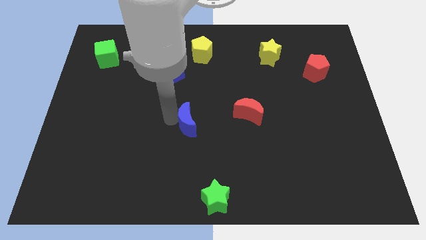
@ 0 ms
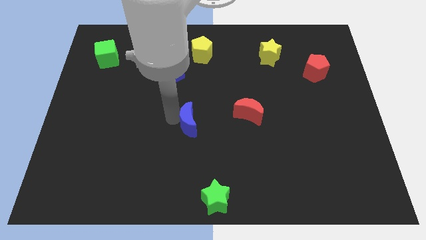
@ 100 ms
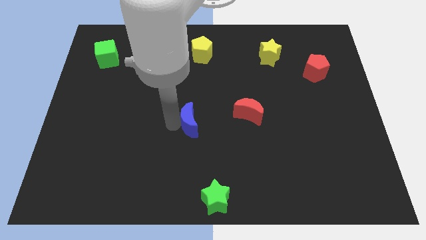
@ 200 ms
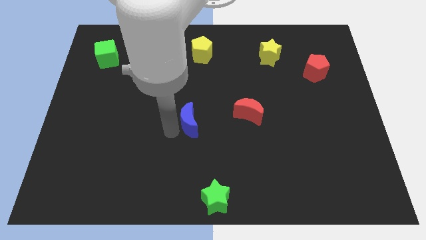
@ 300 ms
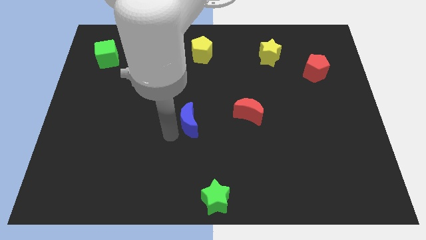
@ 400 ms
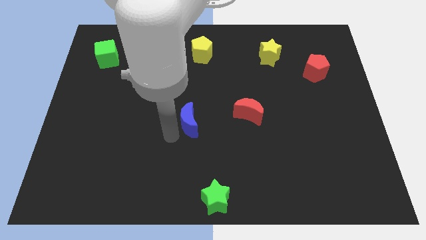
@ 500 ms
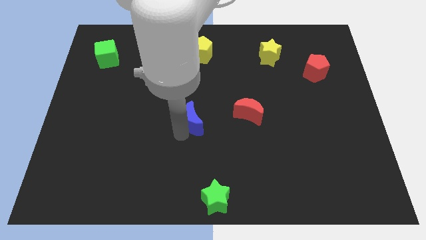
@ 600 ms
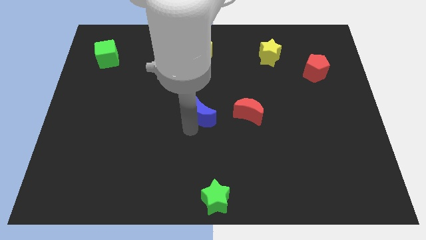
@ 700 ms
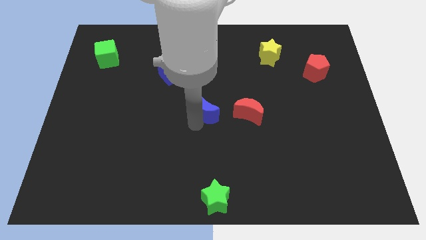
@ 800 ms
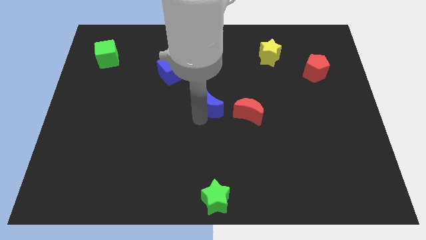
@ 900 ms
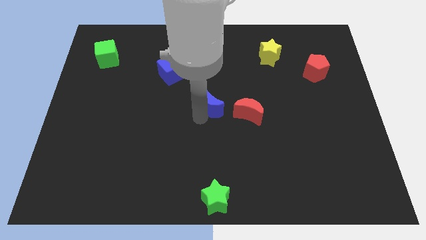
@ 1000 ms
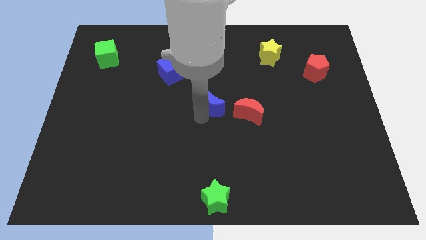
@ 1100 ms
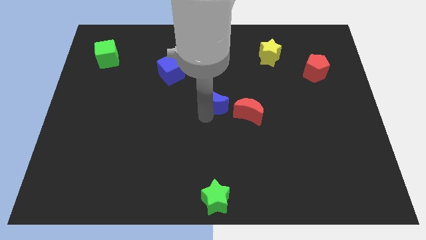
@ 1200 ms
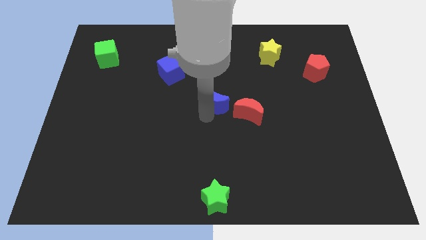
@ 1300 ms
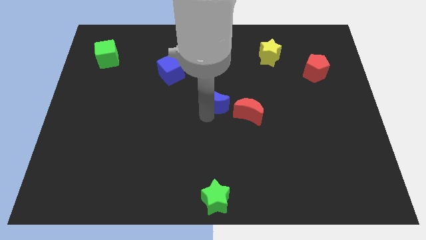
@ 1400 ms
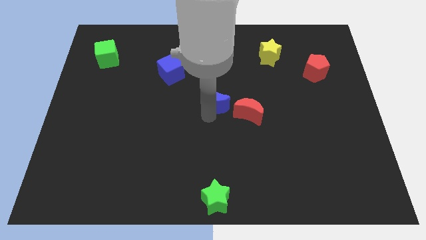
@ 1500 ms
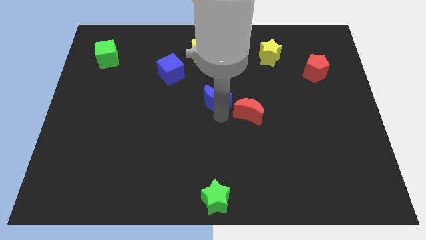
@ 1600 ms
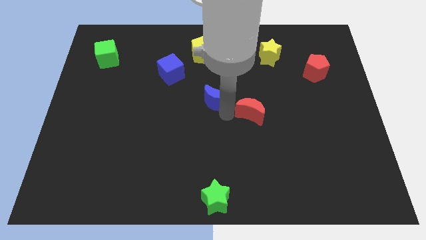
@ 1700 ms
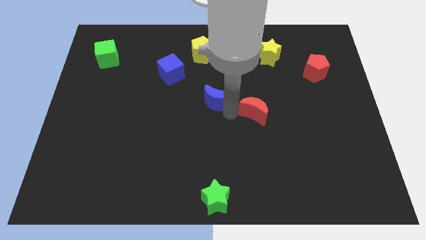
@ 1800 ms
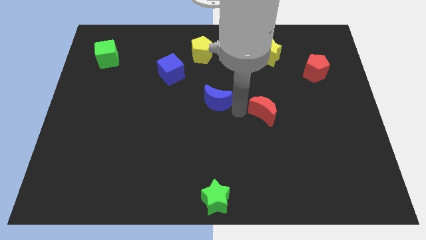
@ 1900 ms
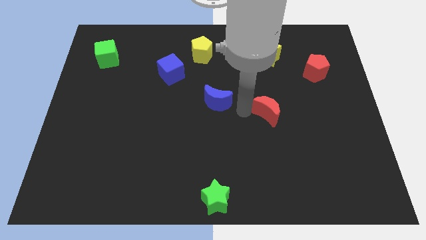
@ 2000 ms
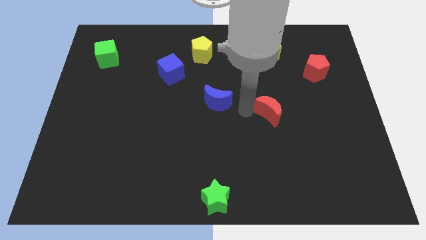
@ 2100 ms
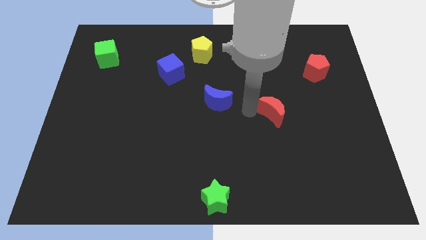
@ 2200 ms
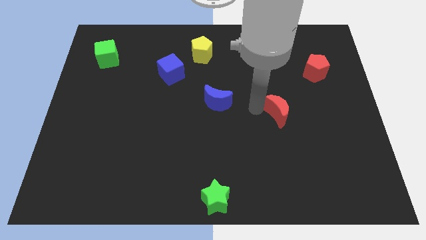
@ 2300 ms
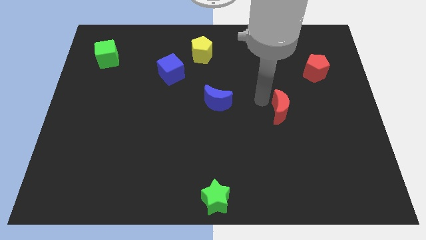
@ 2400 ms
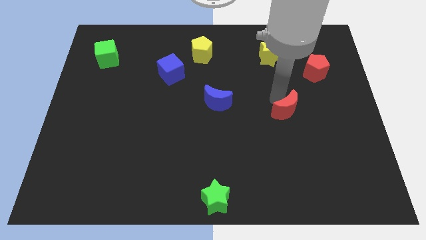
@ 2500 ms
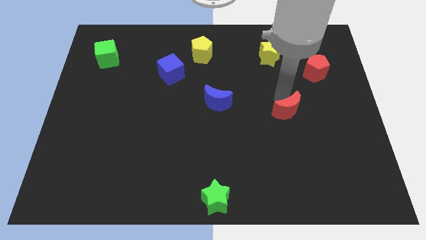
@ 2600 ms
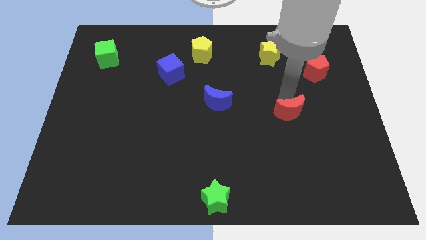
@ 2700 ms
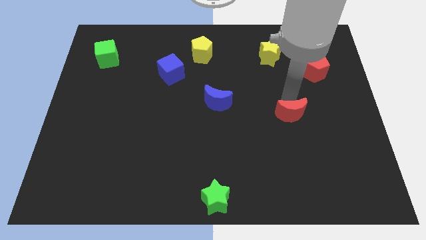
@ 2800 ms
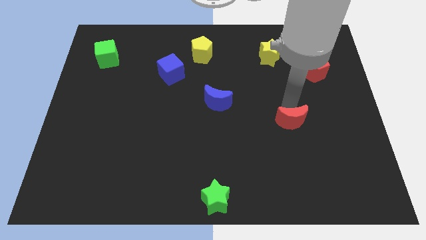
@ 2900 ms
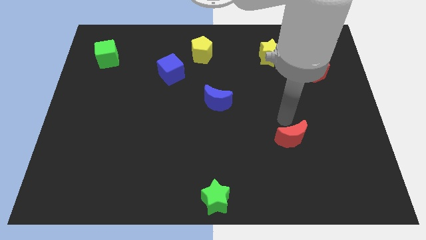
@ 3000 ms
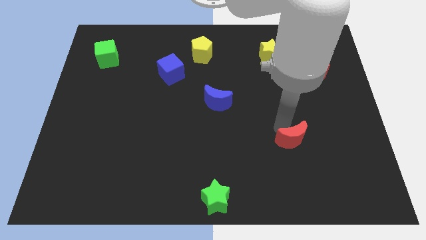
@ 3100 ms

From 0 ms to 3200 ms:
place the red moon diagonally top right to the green star

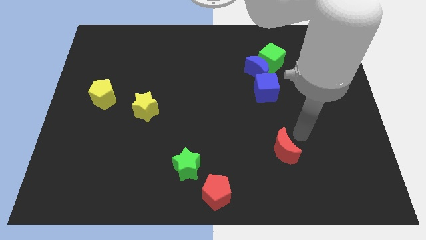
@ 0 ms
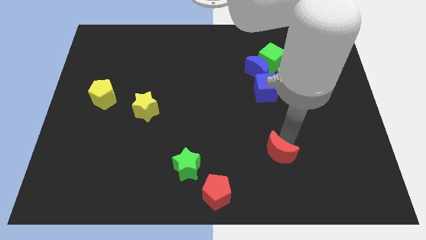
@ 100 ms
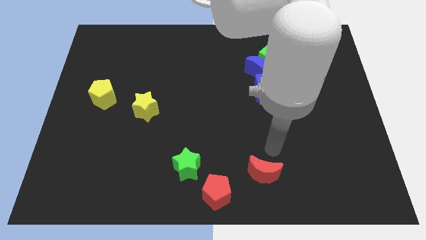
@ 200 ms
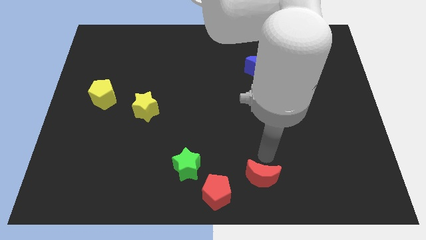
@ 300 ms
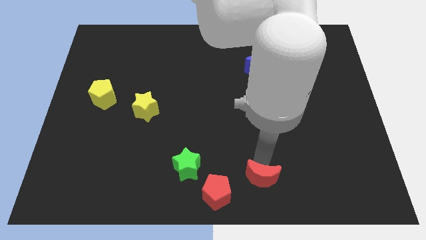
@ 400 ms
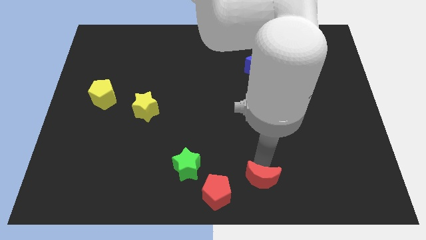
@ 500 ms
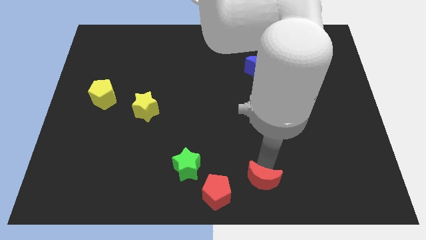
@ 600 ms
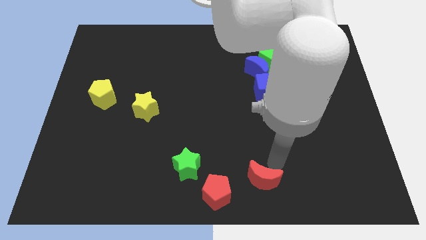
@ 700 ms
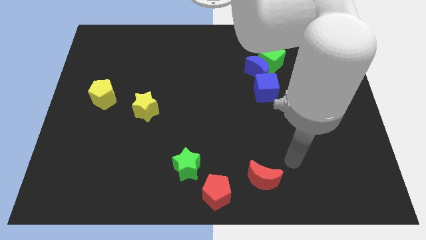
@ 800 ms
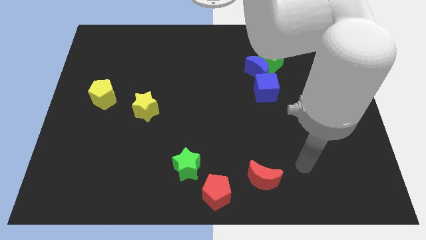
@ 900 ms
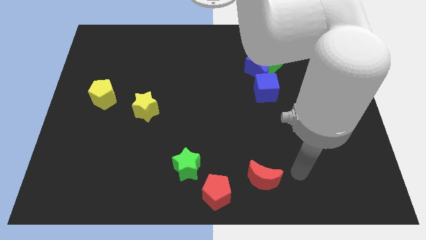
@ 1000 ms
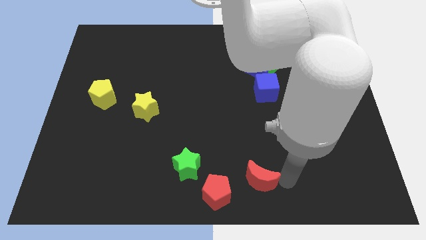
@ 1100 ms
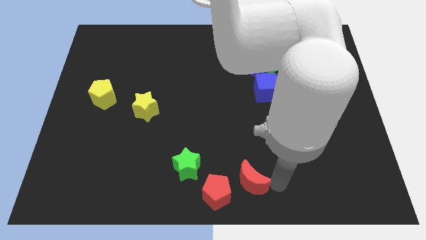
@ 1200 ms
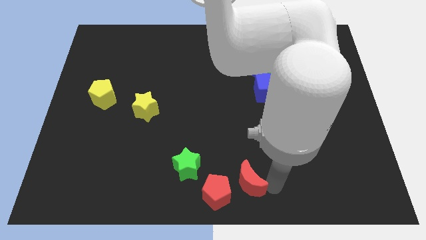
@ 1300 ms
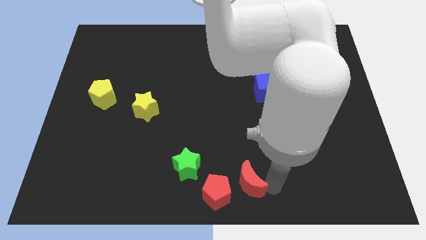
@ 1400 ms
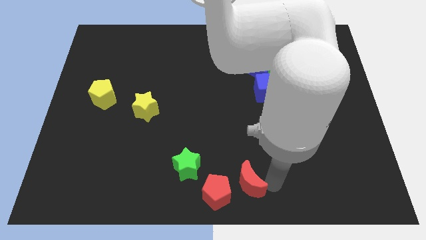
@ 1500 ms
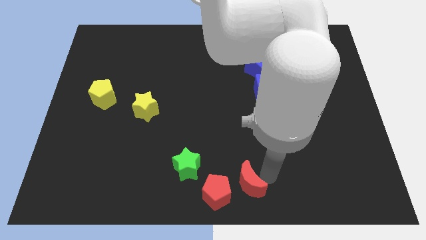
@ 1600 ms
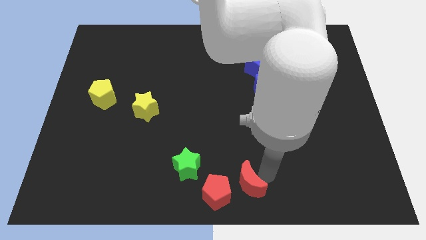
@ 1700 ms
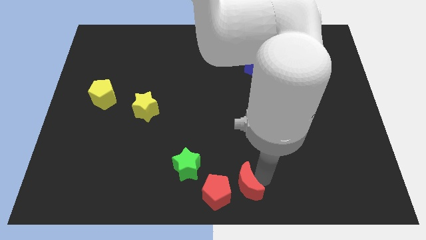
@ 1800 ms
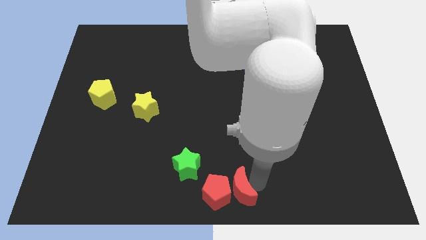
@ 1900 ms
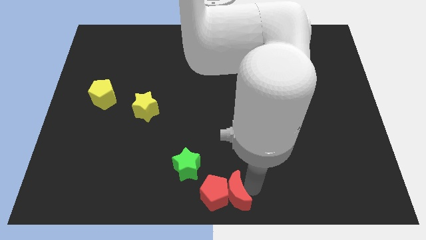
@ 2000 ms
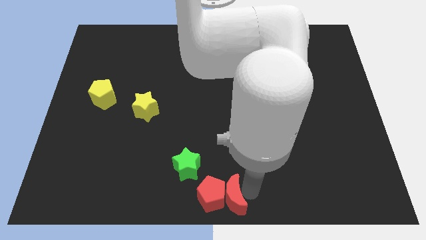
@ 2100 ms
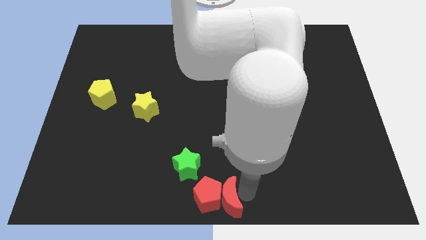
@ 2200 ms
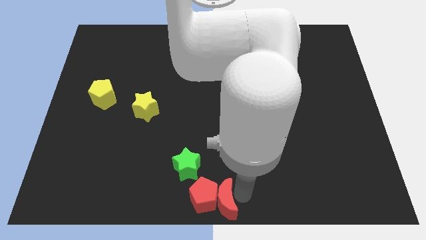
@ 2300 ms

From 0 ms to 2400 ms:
put the red moon right to the red pentagon

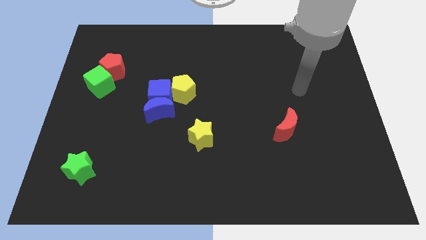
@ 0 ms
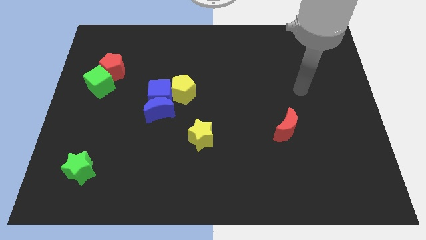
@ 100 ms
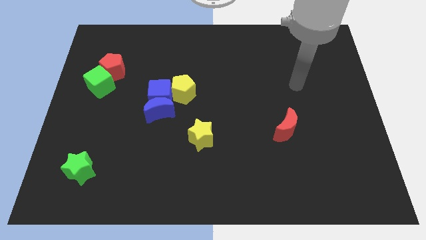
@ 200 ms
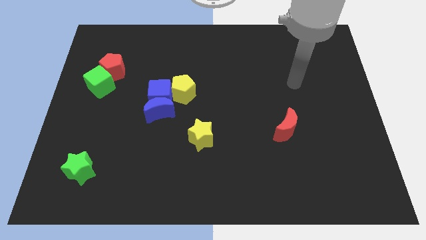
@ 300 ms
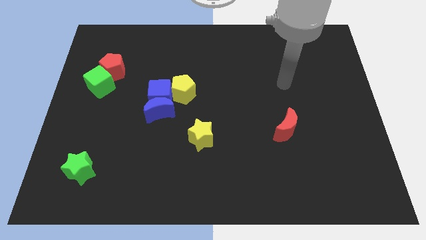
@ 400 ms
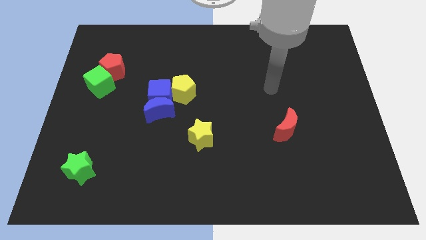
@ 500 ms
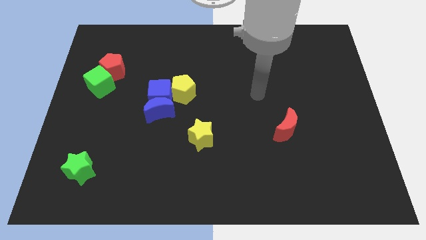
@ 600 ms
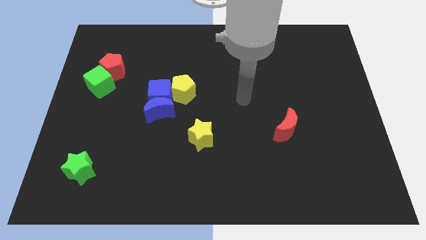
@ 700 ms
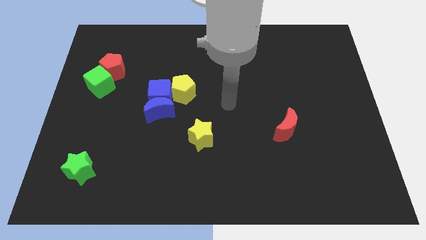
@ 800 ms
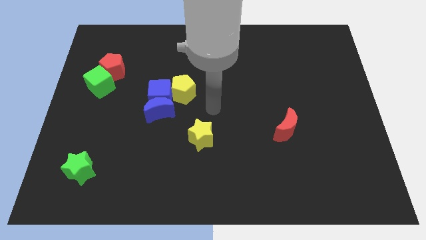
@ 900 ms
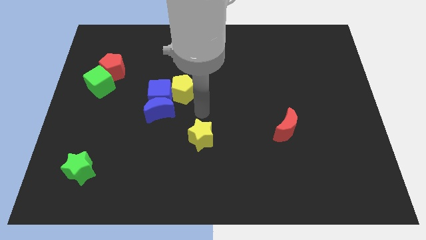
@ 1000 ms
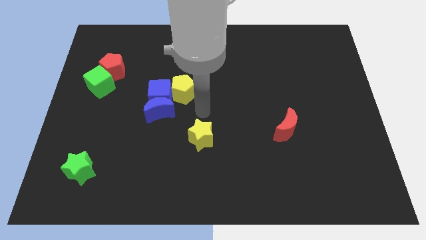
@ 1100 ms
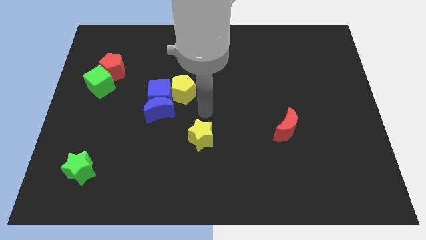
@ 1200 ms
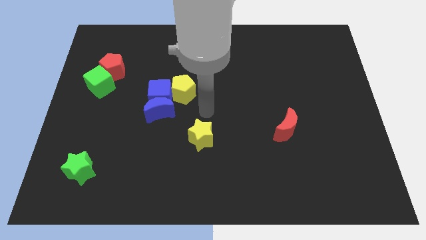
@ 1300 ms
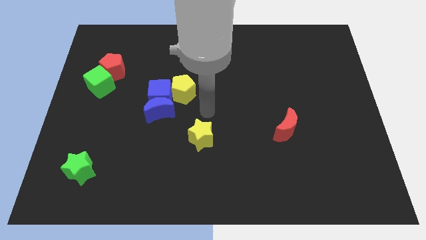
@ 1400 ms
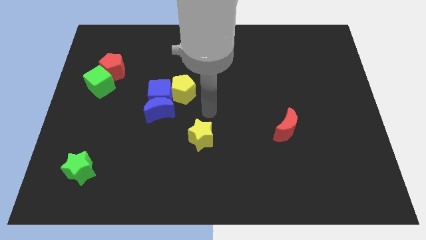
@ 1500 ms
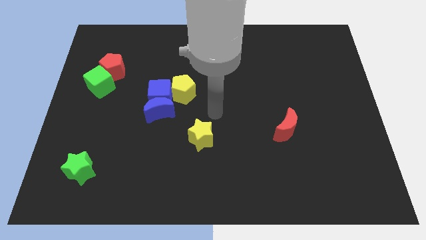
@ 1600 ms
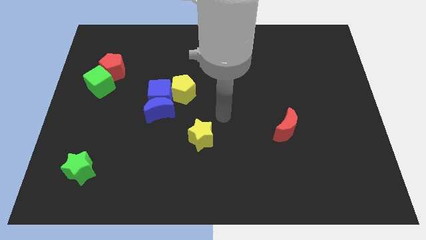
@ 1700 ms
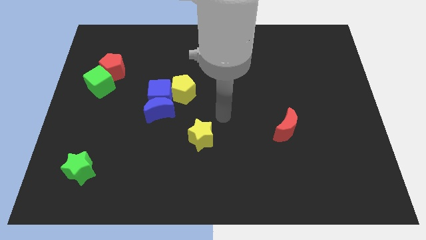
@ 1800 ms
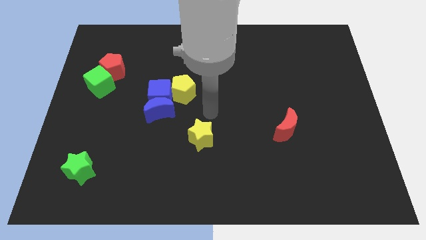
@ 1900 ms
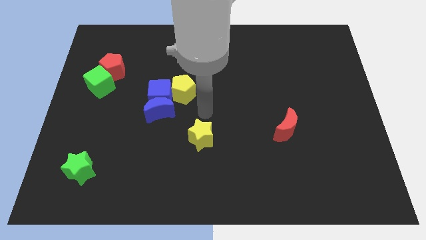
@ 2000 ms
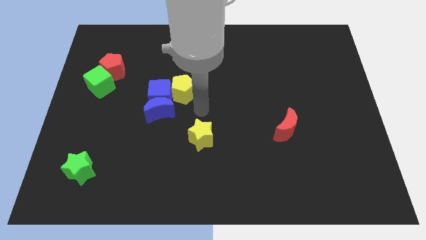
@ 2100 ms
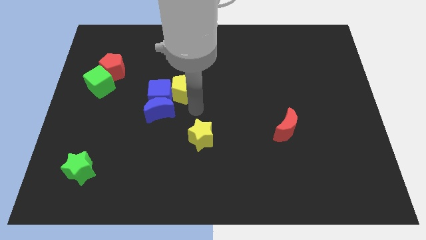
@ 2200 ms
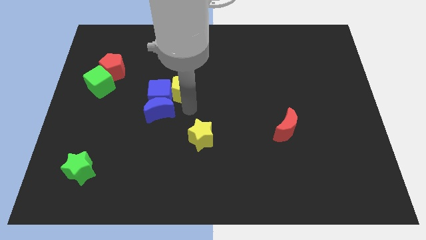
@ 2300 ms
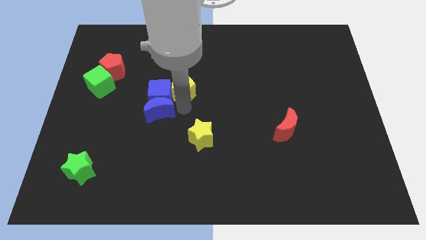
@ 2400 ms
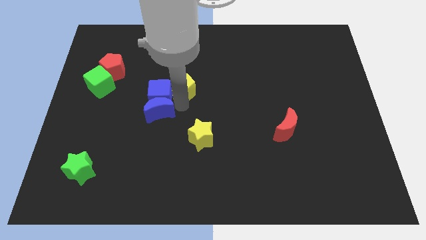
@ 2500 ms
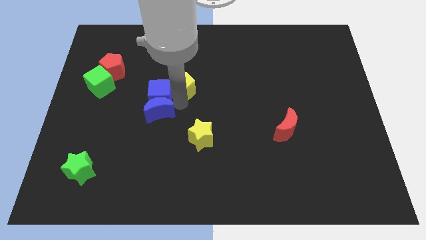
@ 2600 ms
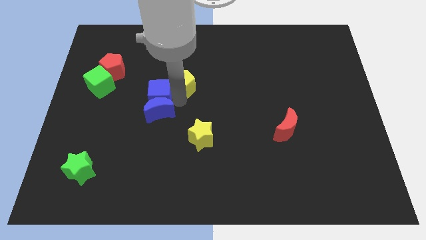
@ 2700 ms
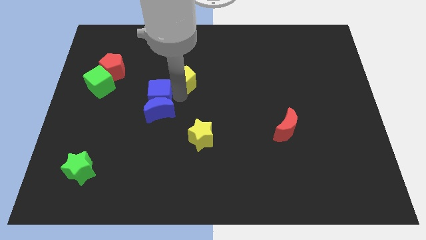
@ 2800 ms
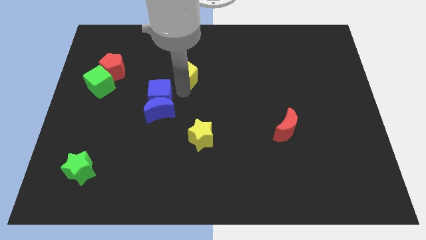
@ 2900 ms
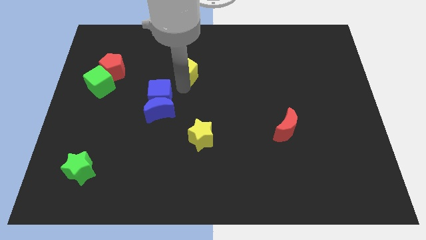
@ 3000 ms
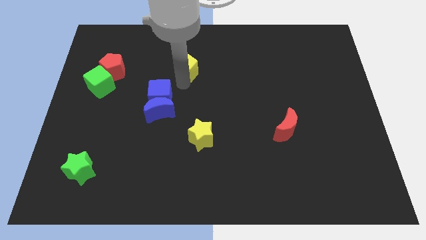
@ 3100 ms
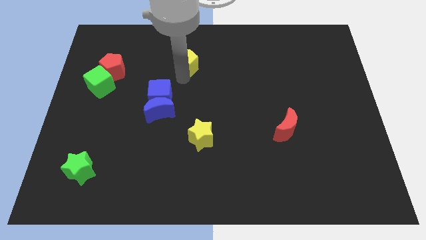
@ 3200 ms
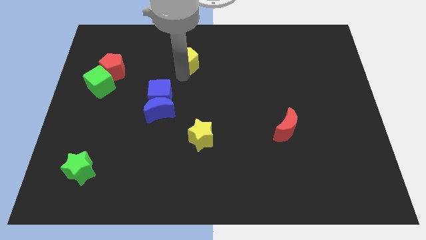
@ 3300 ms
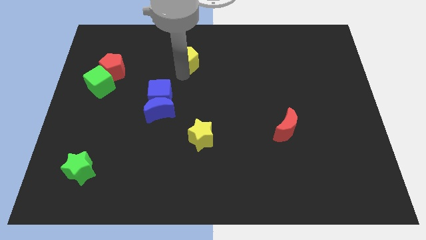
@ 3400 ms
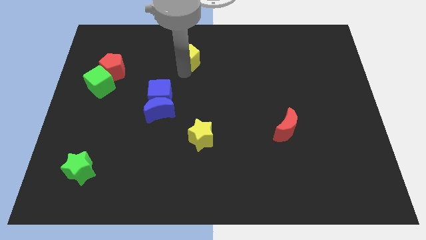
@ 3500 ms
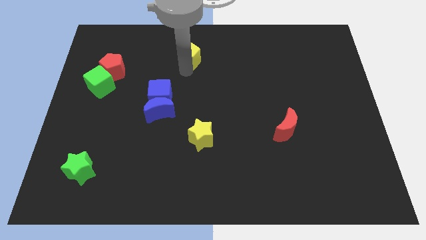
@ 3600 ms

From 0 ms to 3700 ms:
separate the yellow pentagon from the blue cube
